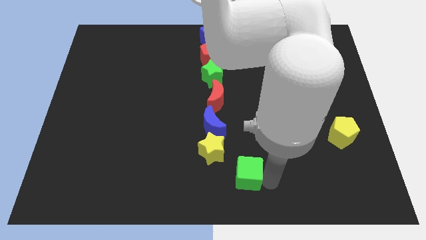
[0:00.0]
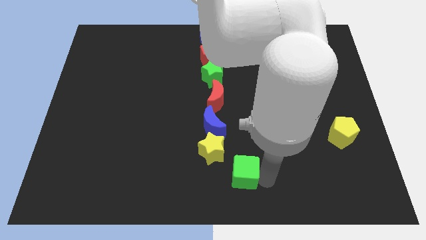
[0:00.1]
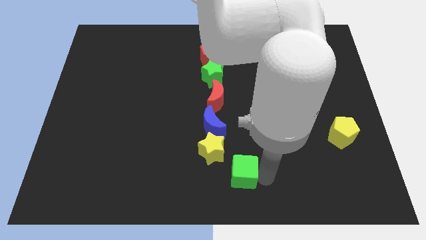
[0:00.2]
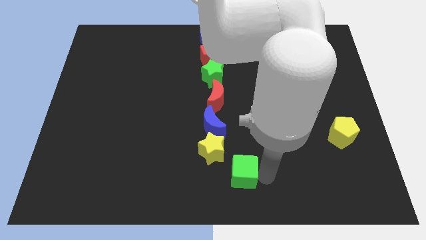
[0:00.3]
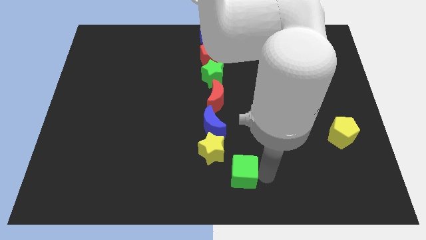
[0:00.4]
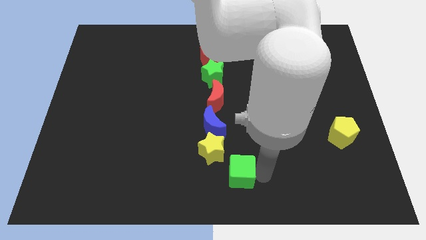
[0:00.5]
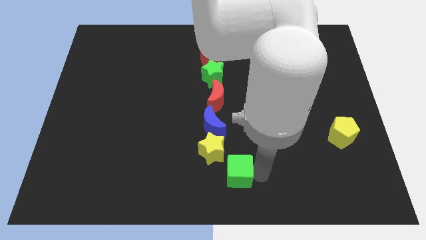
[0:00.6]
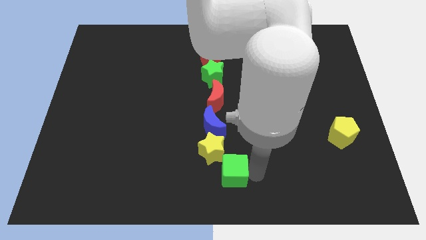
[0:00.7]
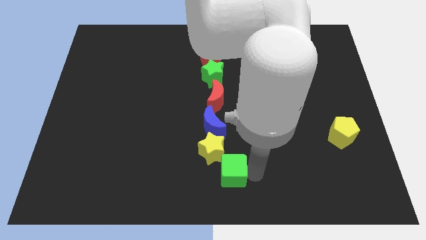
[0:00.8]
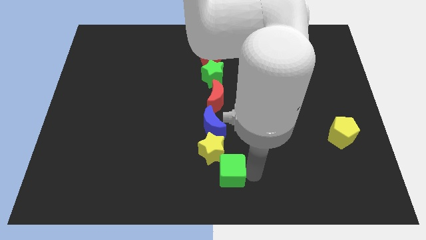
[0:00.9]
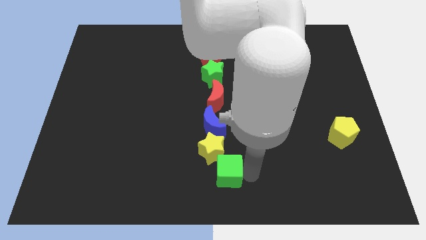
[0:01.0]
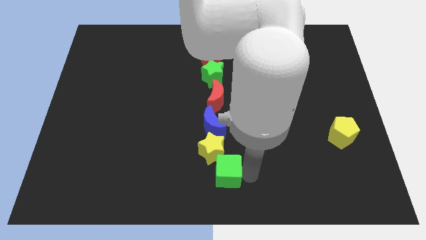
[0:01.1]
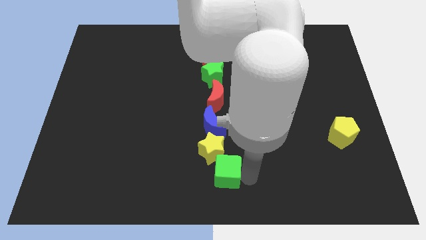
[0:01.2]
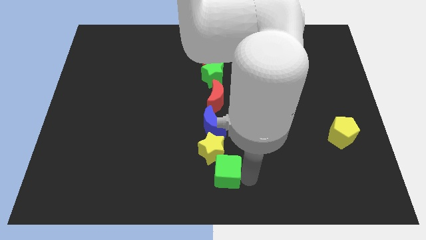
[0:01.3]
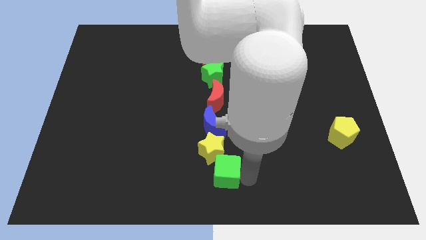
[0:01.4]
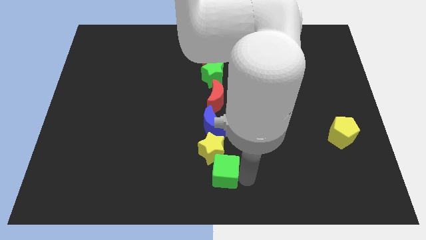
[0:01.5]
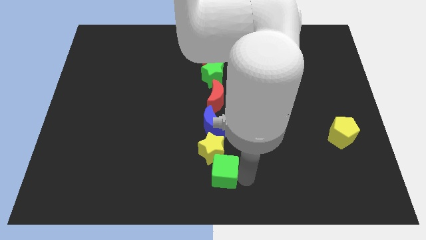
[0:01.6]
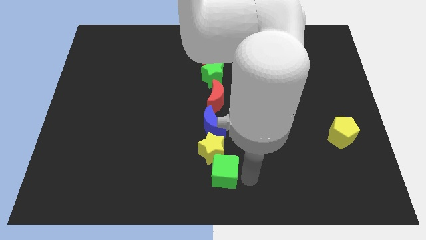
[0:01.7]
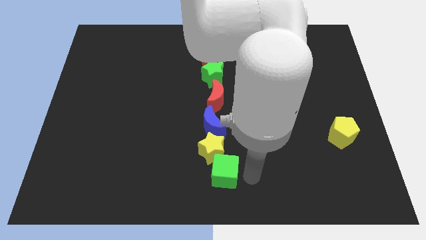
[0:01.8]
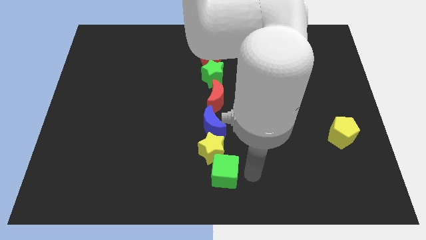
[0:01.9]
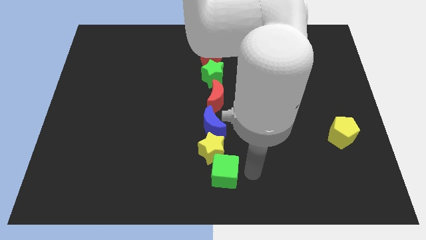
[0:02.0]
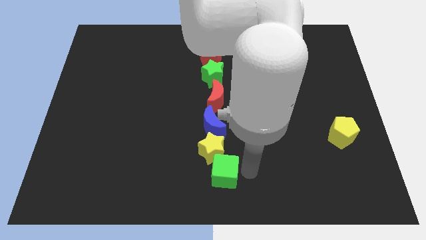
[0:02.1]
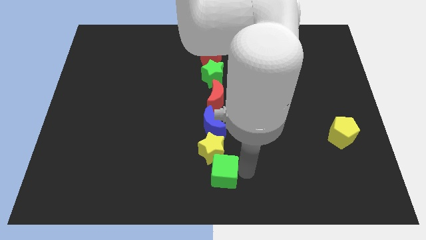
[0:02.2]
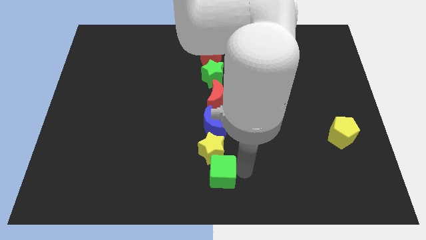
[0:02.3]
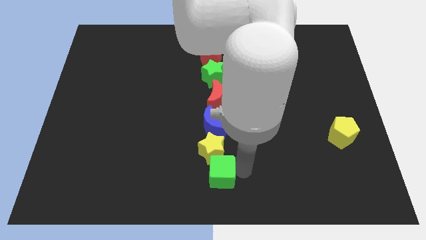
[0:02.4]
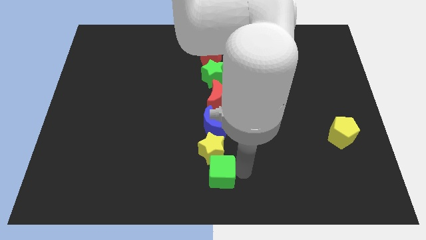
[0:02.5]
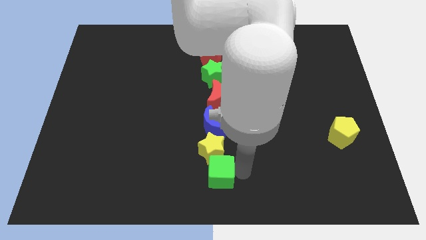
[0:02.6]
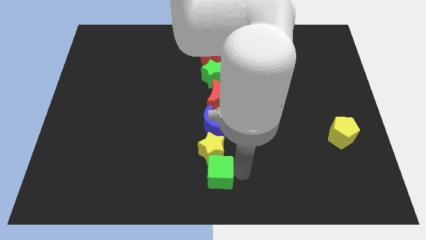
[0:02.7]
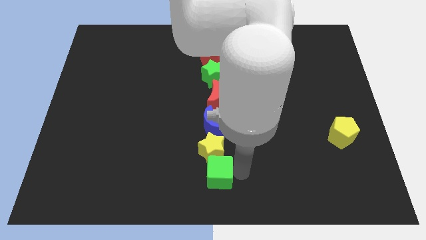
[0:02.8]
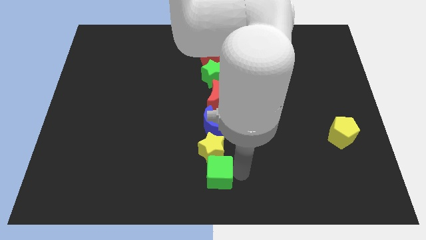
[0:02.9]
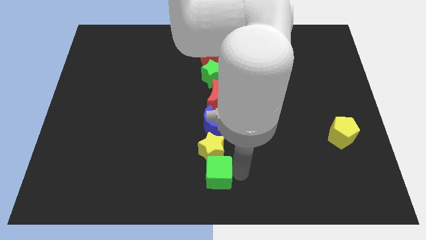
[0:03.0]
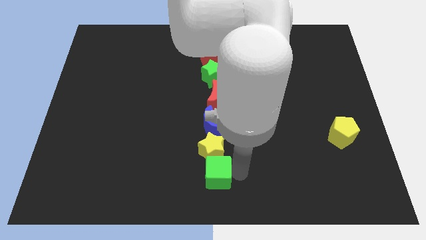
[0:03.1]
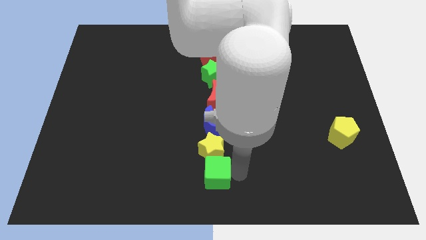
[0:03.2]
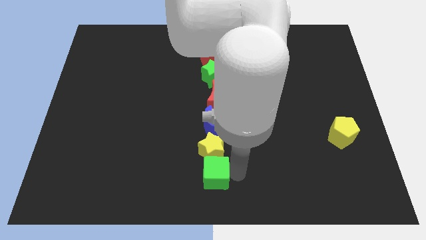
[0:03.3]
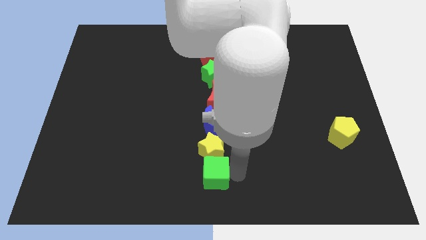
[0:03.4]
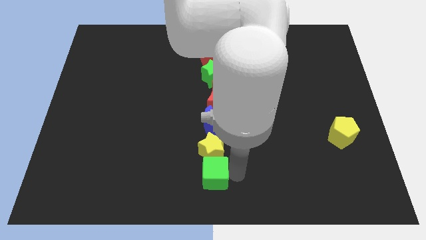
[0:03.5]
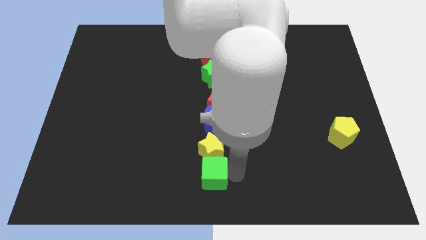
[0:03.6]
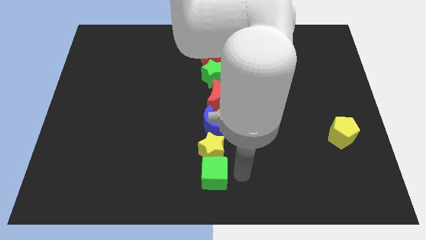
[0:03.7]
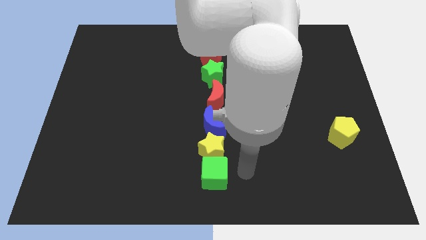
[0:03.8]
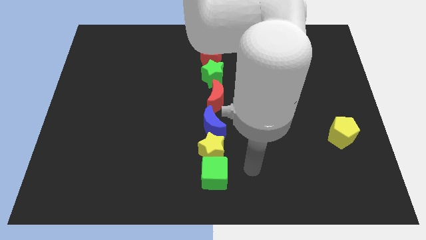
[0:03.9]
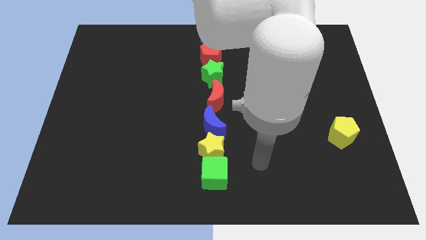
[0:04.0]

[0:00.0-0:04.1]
move the green cube to the bottom of the yellow star

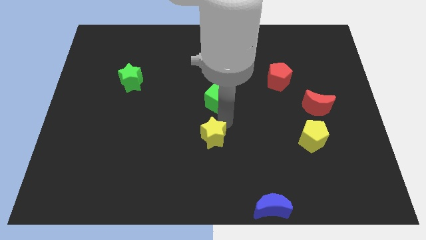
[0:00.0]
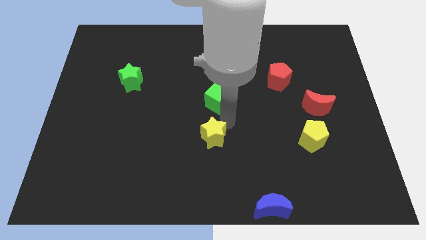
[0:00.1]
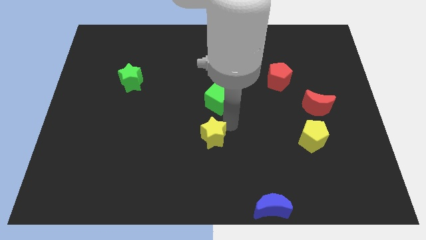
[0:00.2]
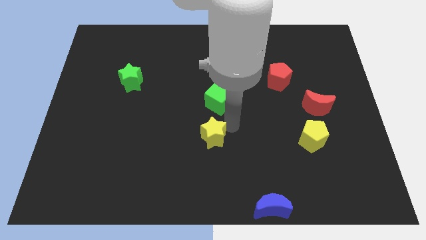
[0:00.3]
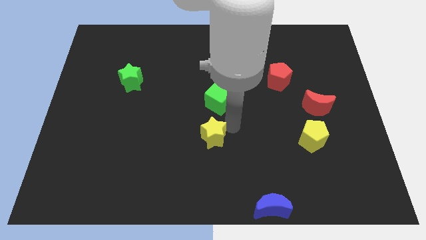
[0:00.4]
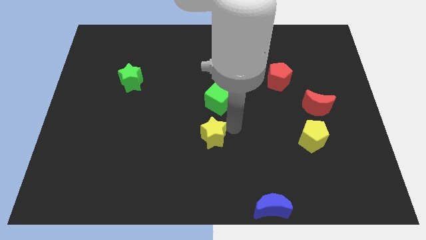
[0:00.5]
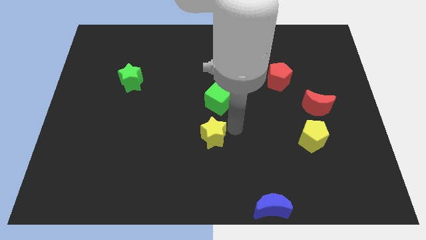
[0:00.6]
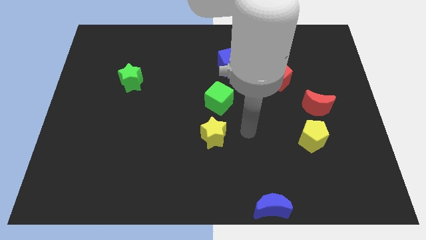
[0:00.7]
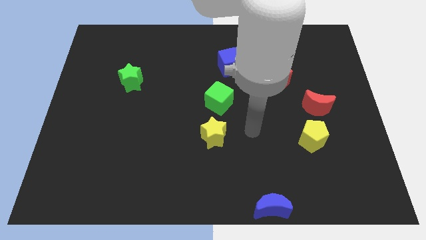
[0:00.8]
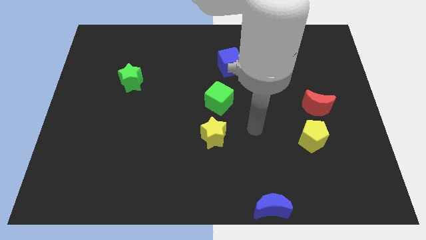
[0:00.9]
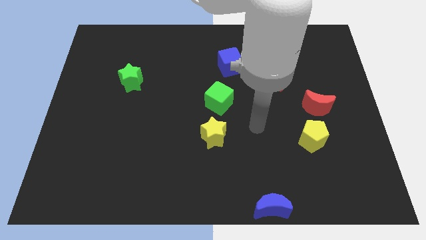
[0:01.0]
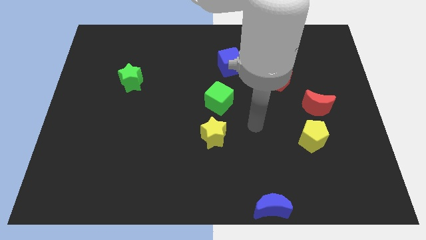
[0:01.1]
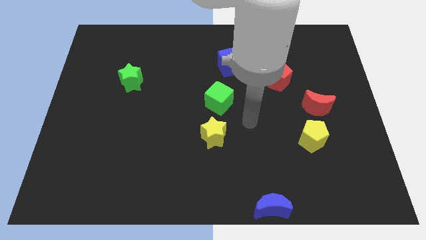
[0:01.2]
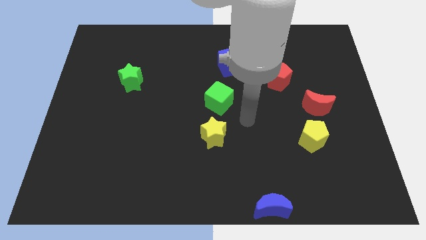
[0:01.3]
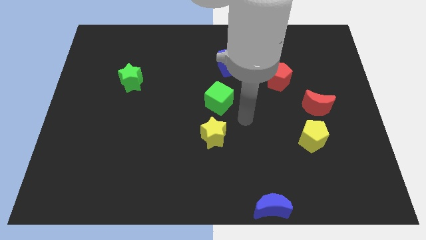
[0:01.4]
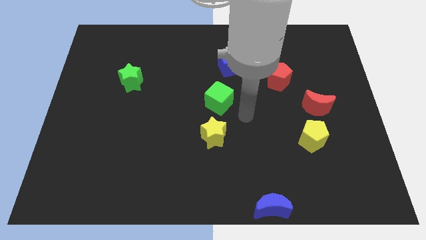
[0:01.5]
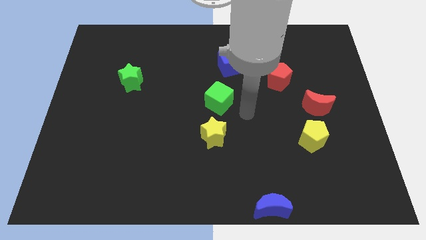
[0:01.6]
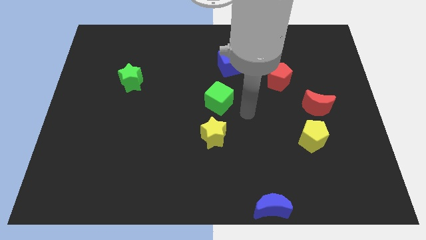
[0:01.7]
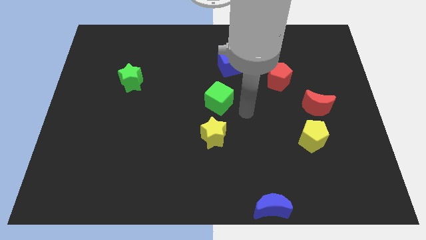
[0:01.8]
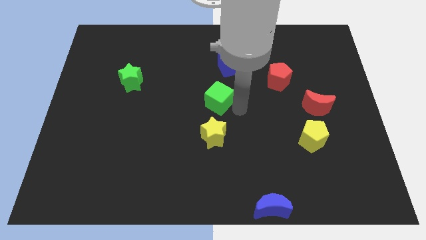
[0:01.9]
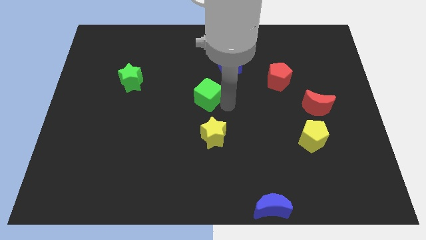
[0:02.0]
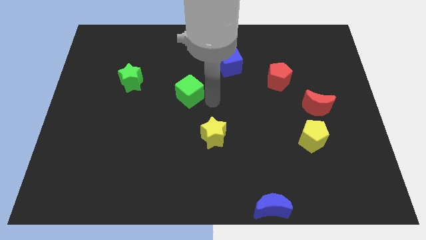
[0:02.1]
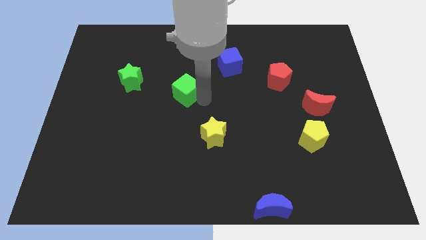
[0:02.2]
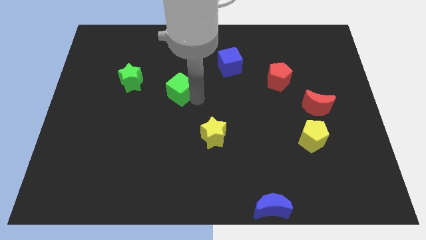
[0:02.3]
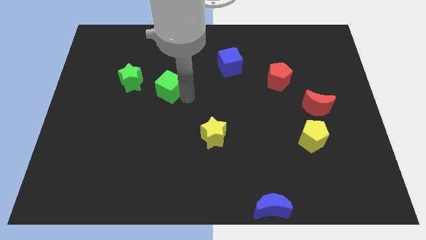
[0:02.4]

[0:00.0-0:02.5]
slide the green cube towards the green star

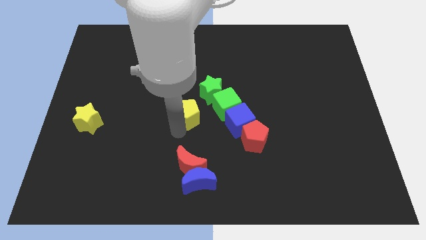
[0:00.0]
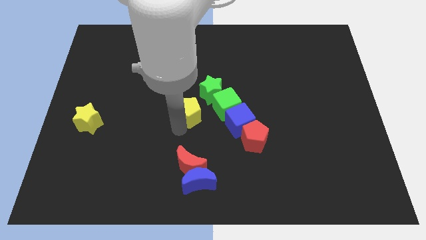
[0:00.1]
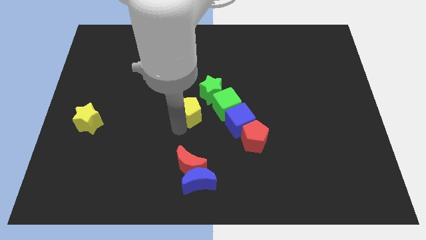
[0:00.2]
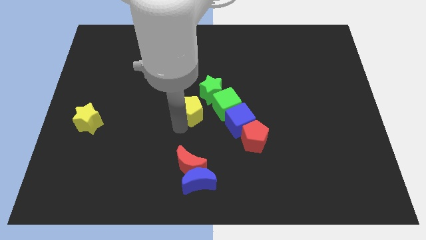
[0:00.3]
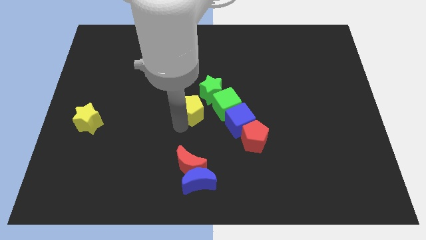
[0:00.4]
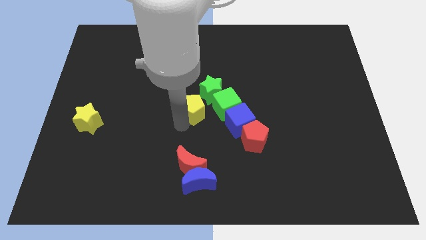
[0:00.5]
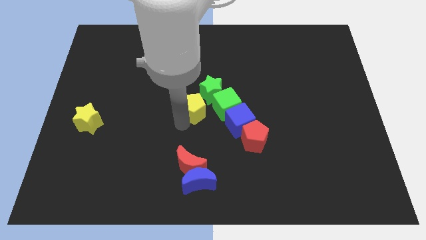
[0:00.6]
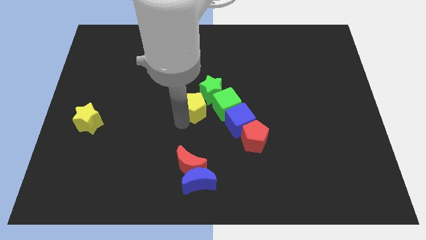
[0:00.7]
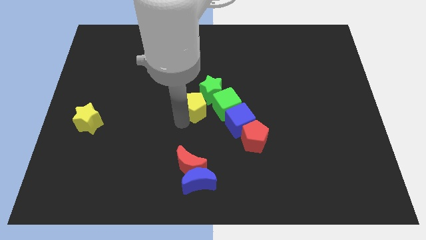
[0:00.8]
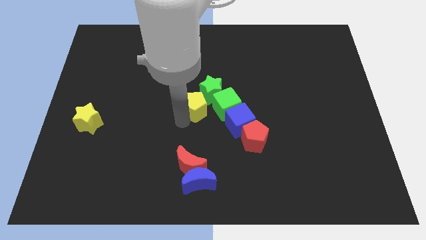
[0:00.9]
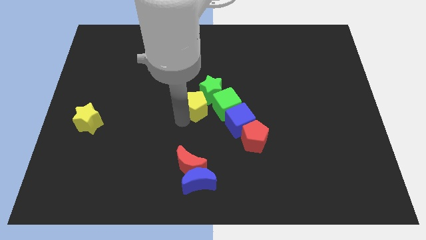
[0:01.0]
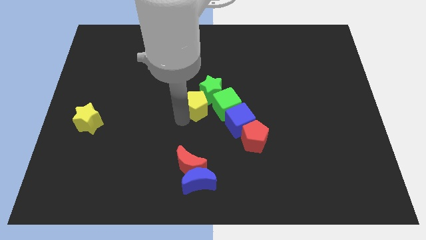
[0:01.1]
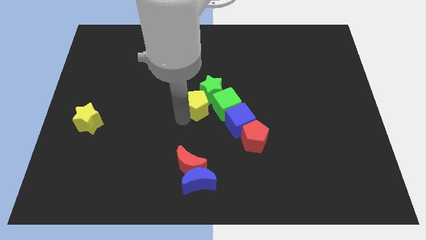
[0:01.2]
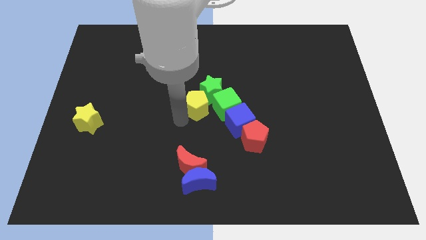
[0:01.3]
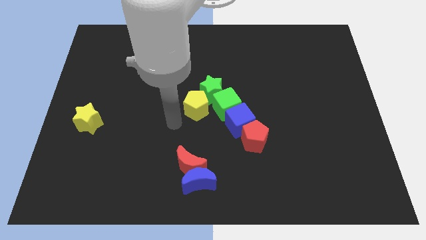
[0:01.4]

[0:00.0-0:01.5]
place the yellow pentagon close to the green star

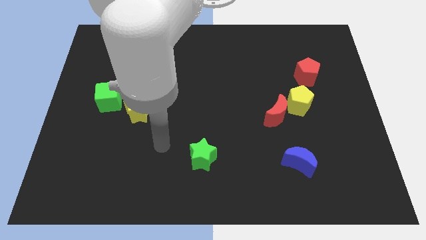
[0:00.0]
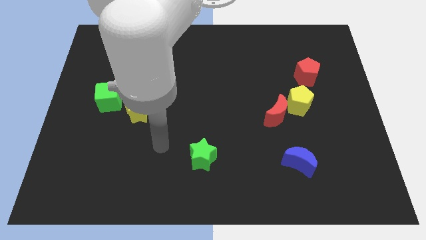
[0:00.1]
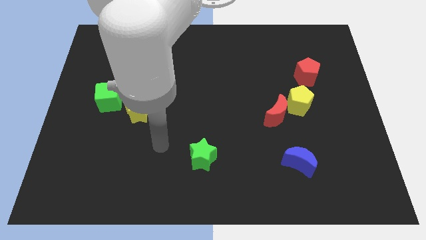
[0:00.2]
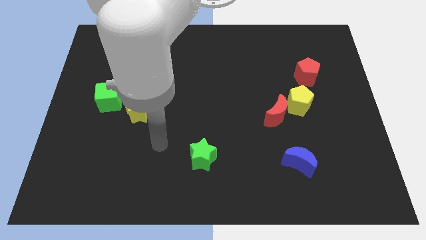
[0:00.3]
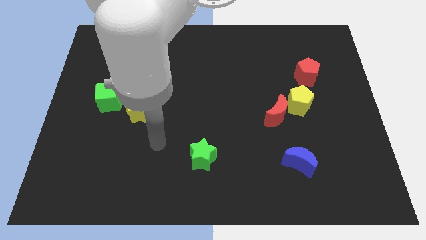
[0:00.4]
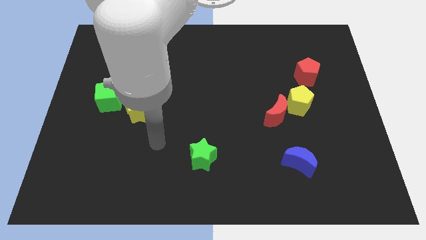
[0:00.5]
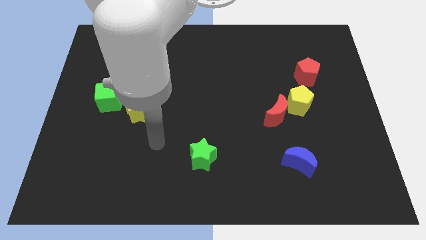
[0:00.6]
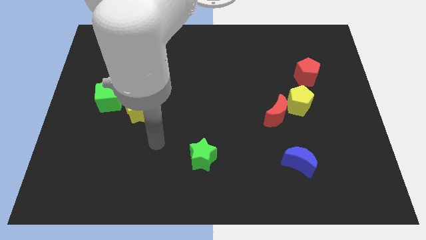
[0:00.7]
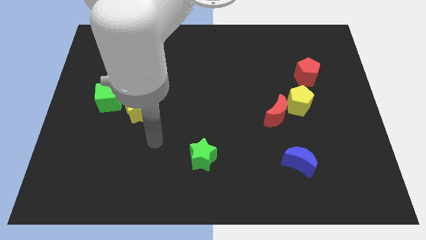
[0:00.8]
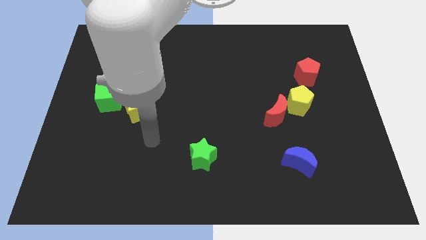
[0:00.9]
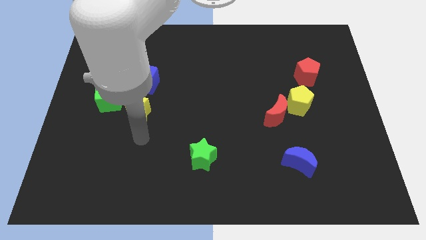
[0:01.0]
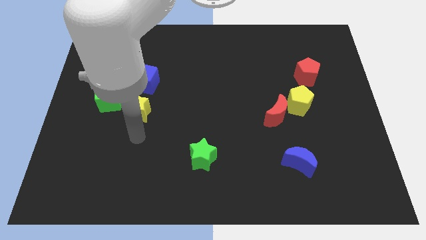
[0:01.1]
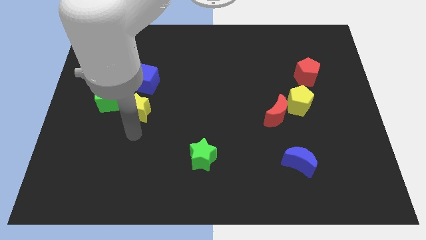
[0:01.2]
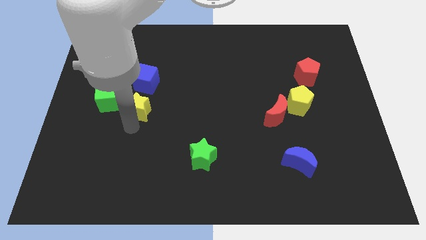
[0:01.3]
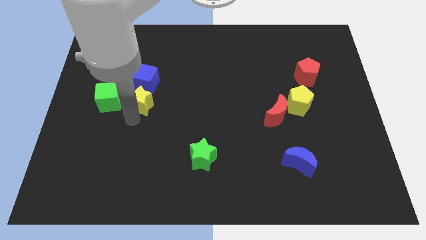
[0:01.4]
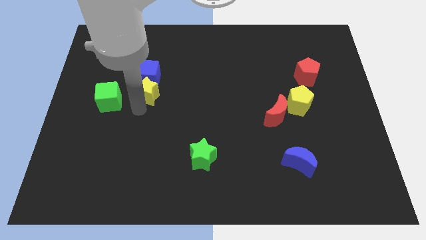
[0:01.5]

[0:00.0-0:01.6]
push the yellow star into the blue cube
